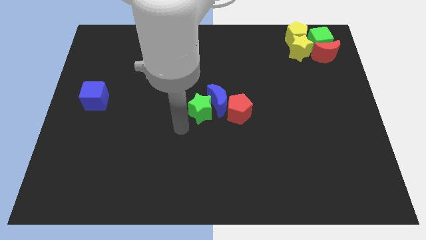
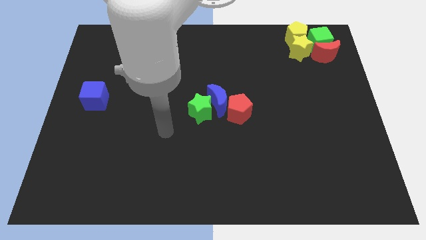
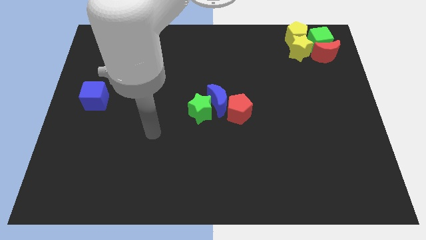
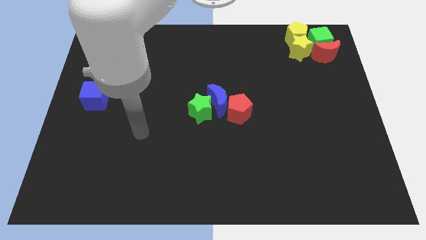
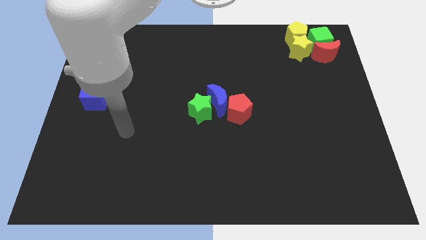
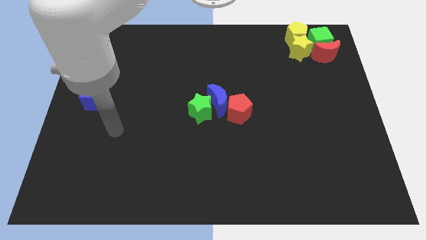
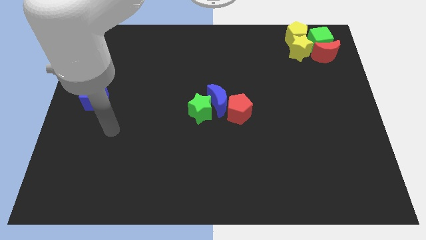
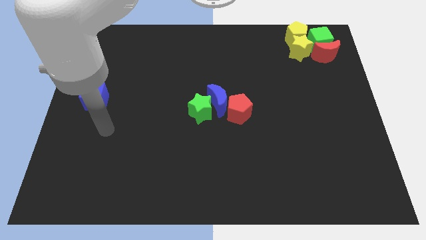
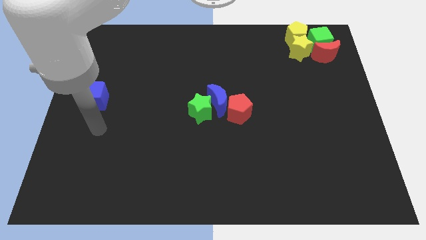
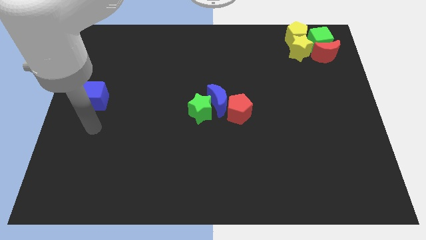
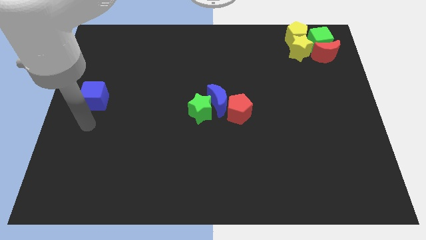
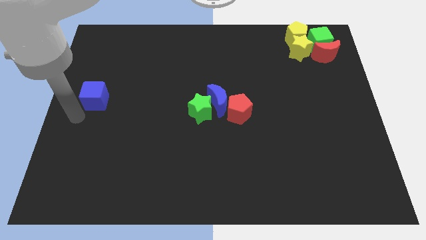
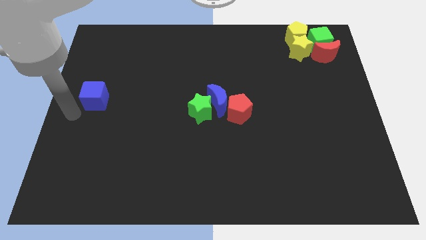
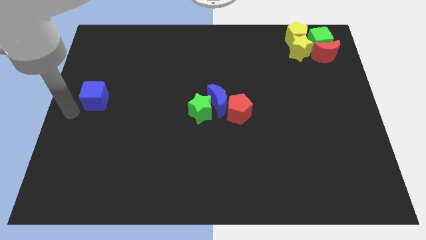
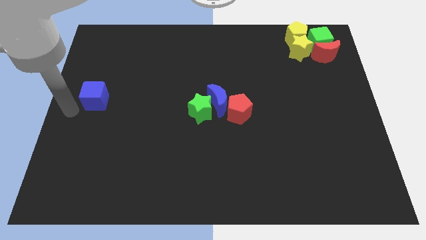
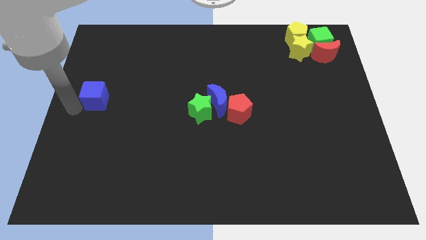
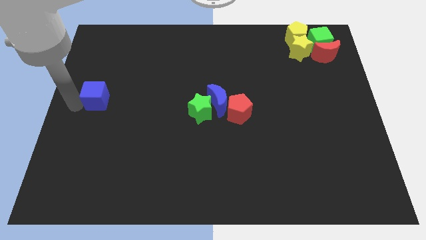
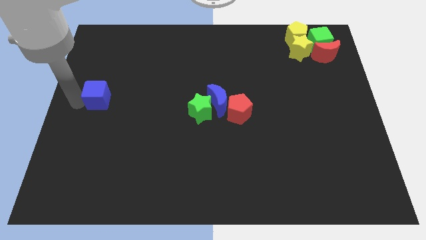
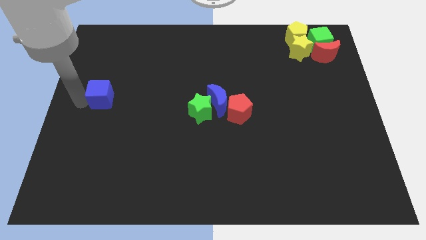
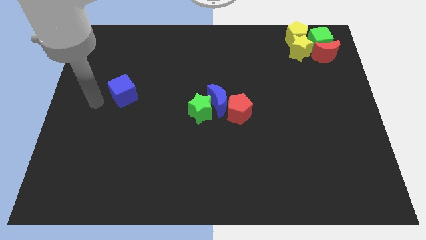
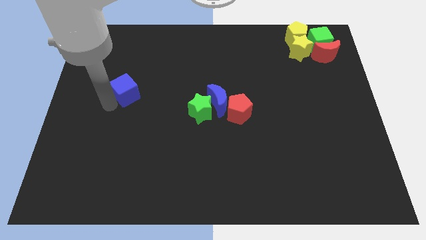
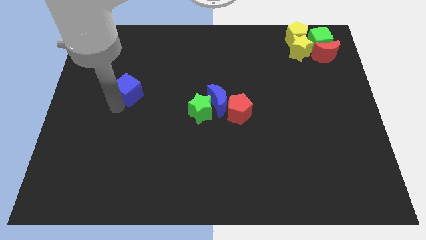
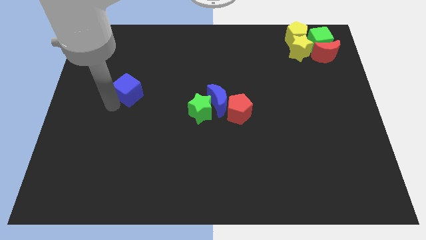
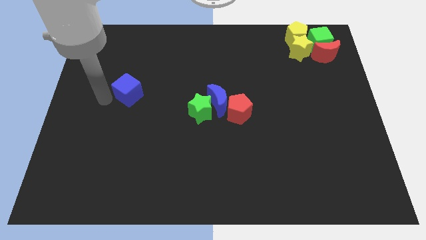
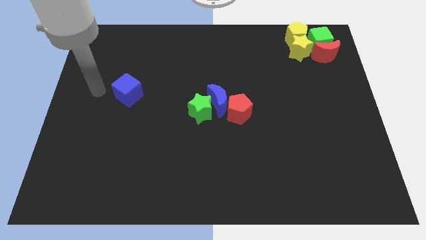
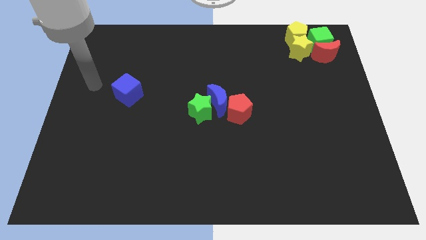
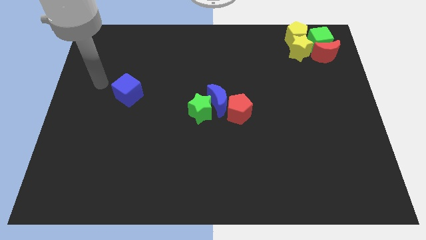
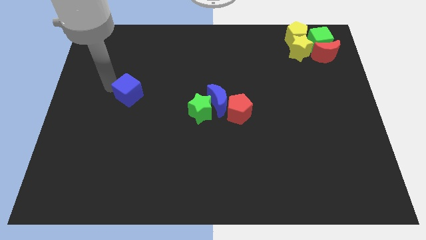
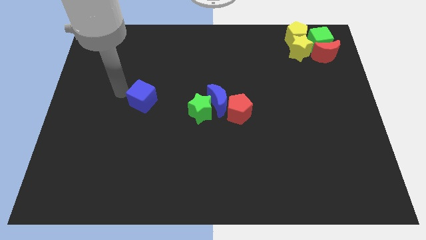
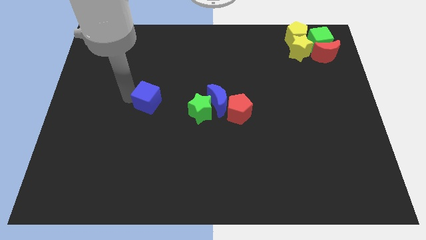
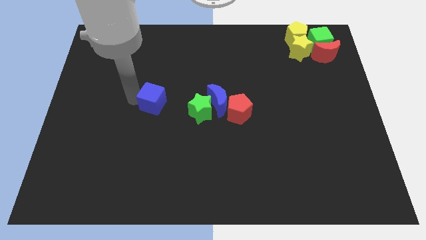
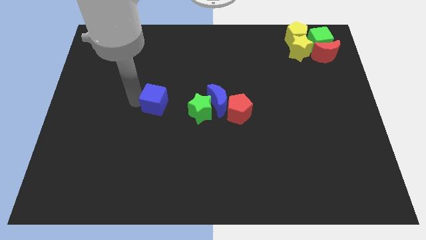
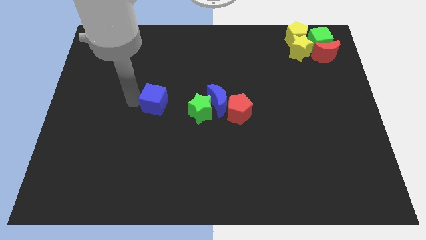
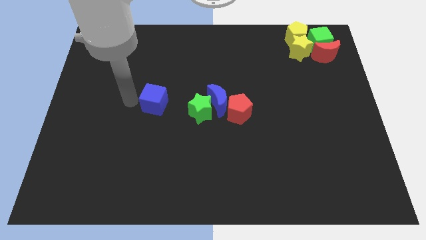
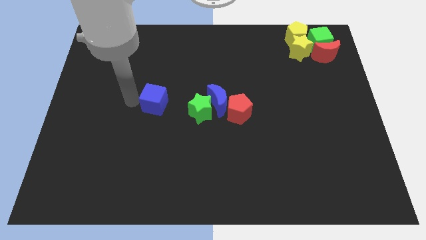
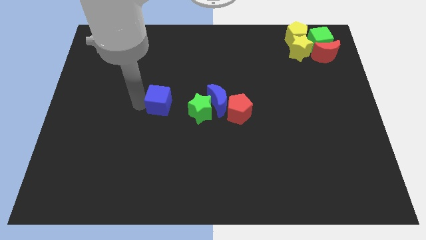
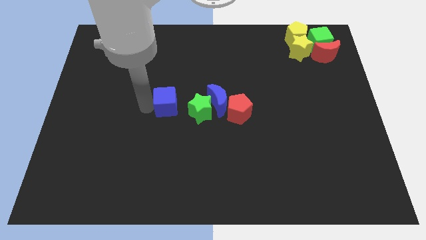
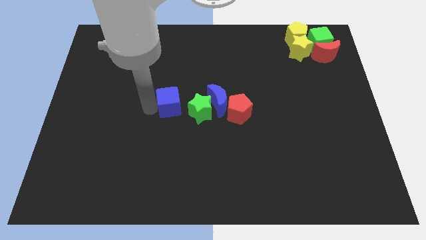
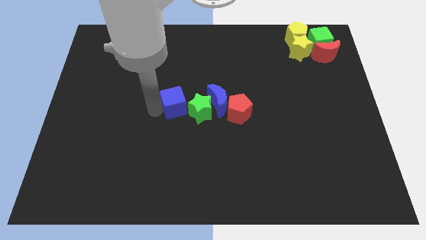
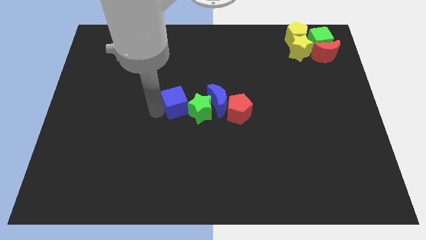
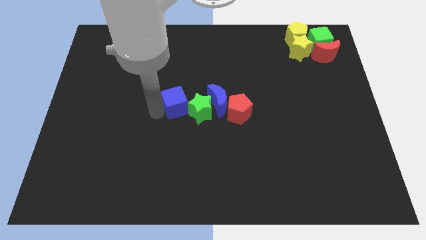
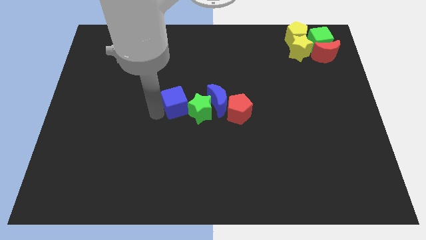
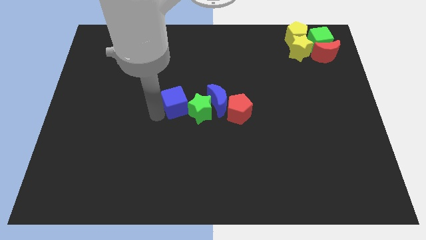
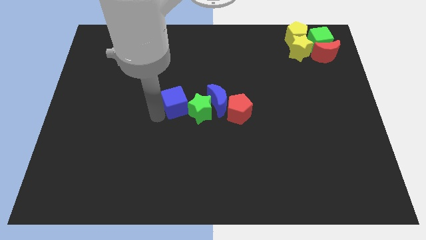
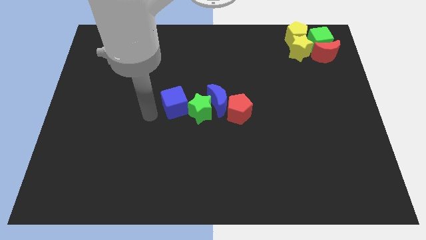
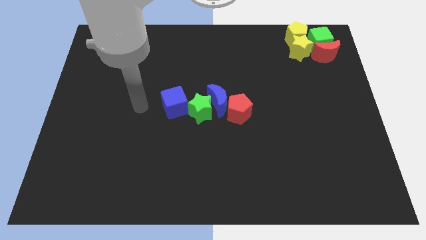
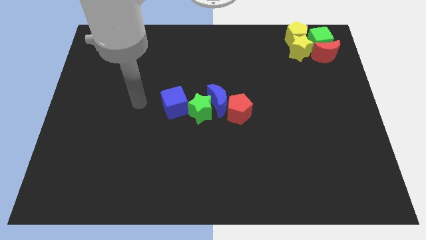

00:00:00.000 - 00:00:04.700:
move the blue cube to the left of the green star

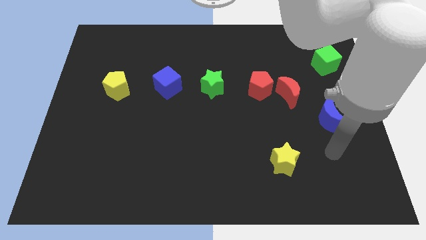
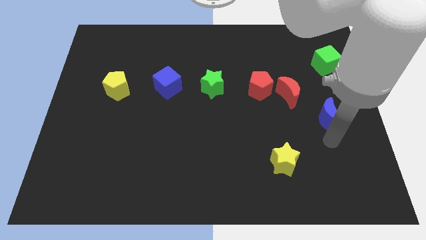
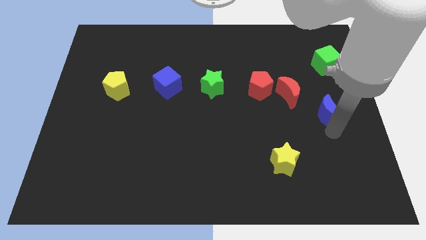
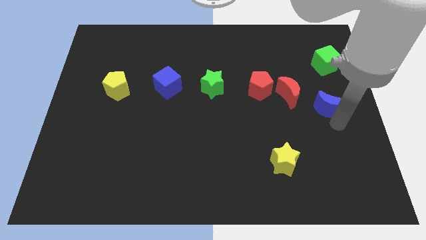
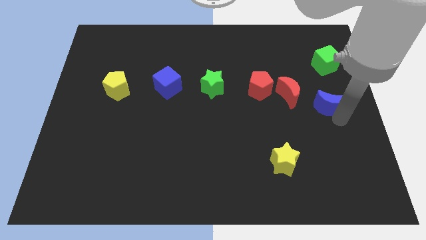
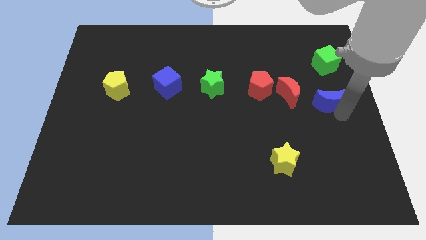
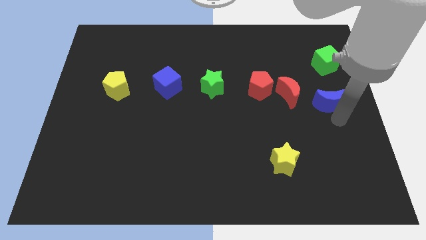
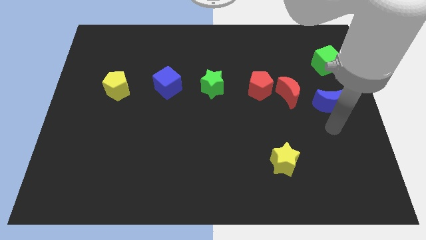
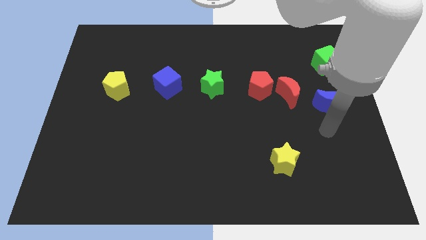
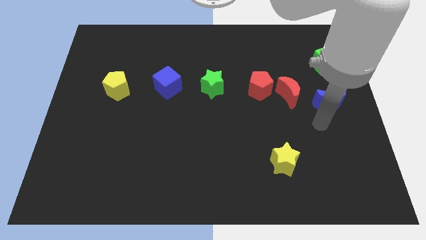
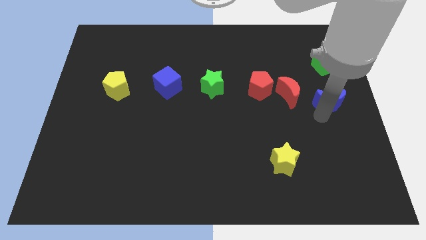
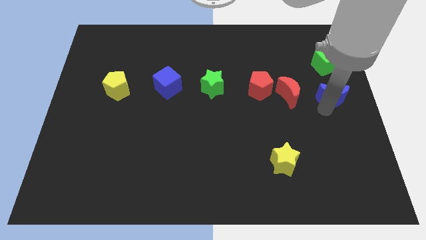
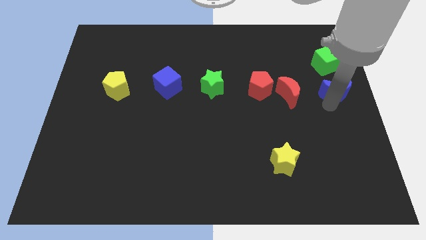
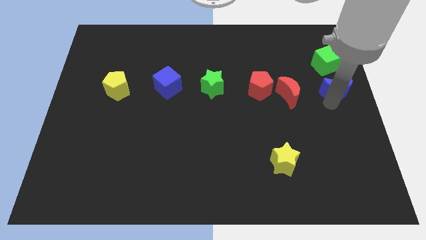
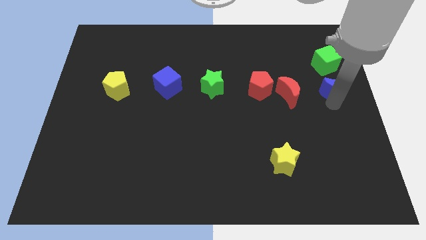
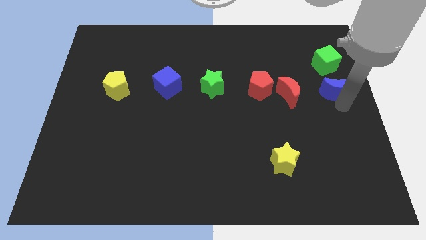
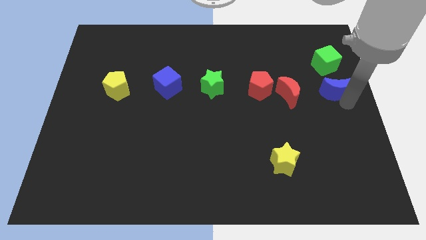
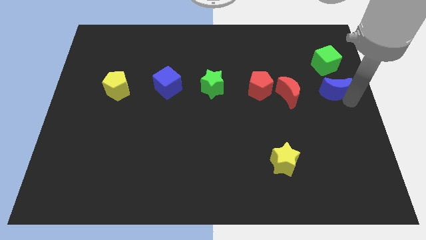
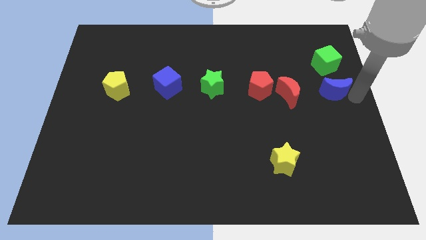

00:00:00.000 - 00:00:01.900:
move the blue moon below the green cube

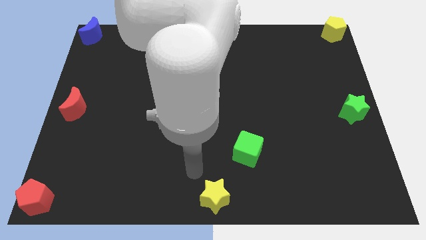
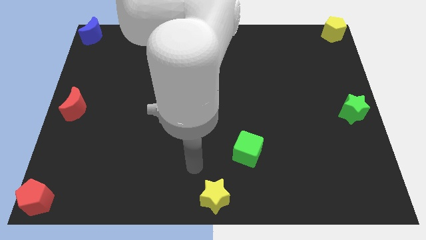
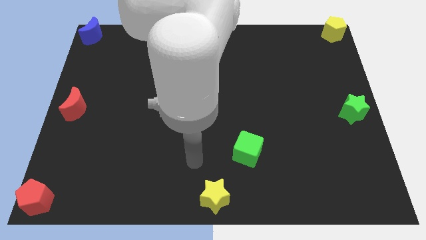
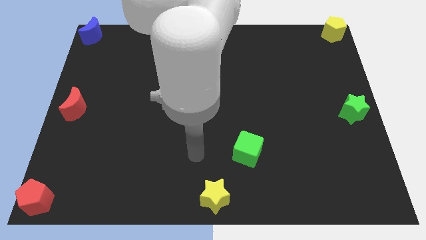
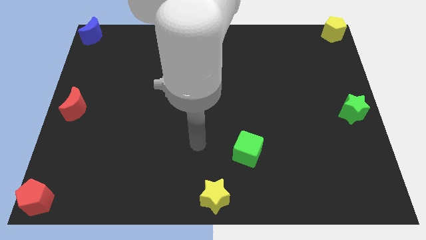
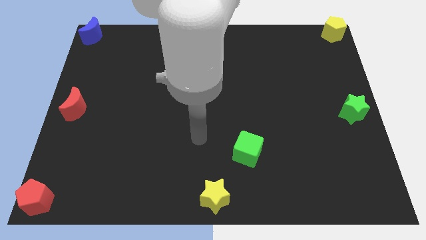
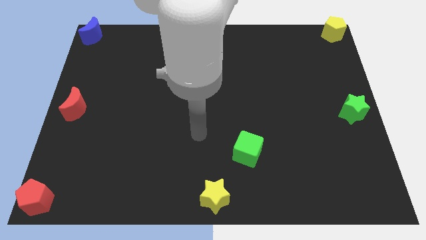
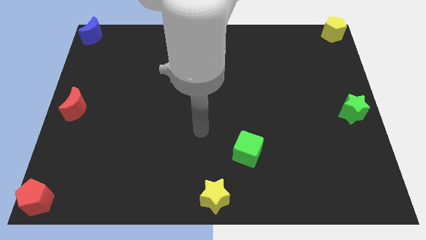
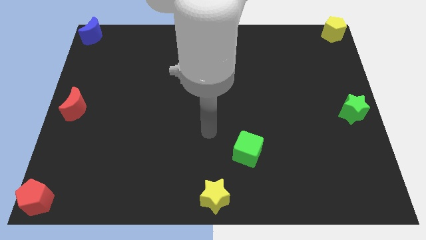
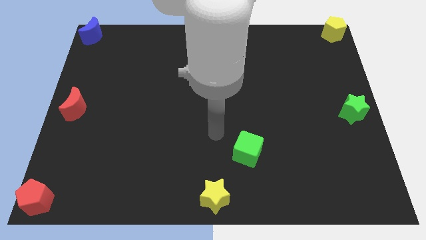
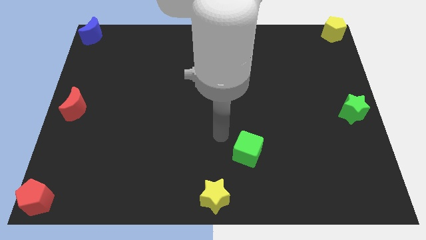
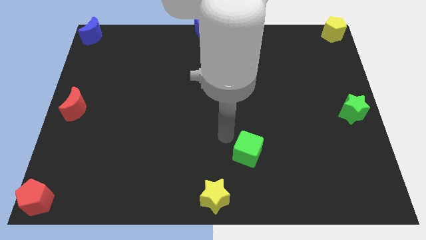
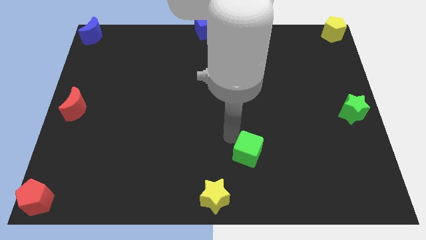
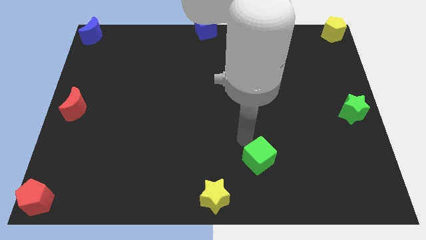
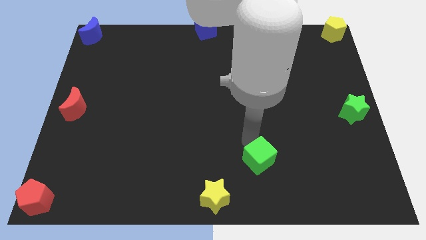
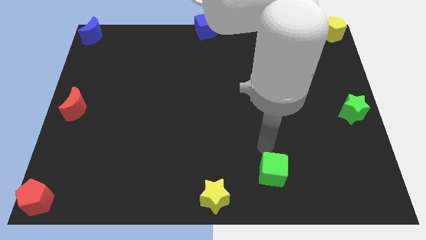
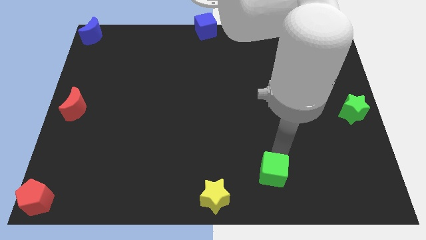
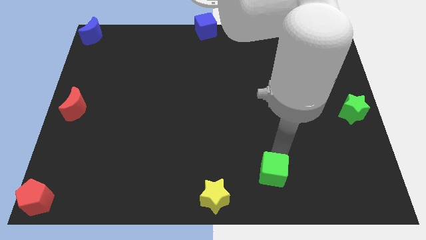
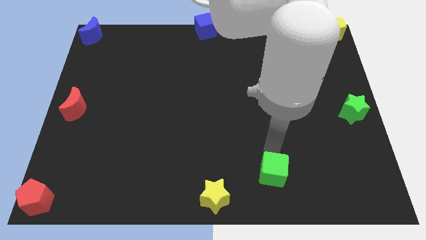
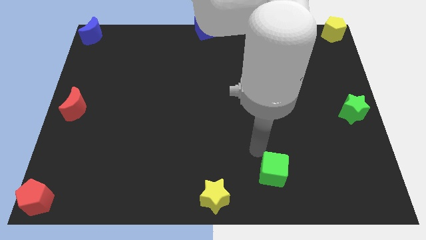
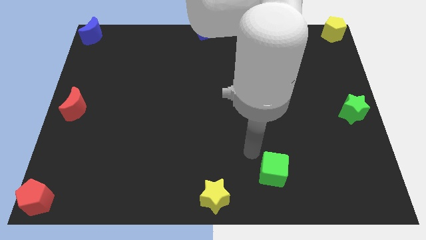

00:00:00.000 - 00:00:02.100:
slightly touch the green cube

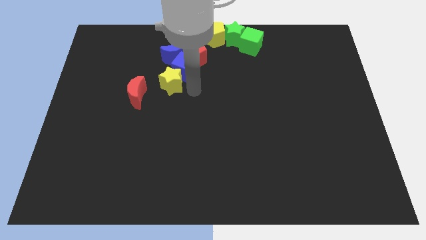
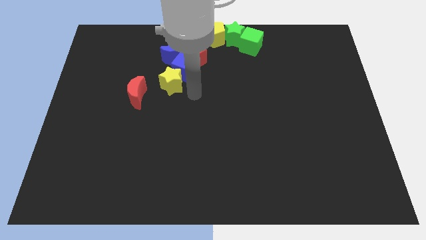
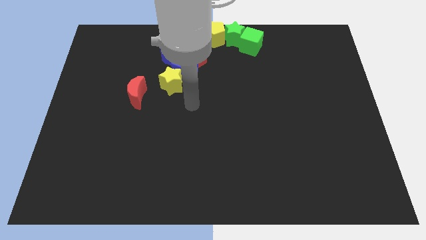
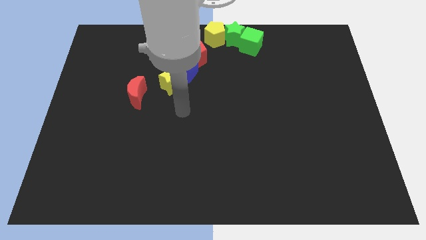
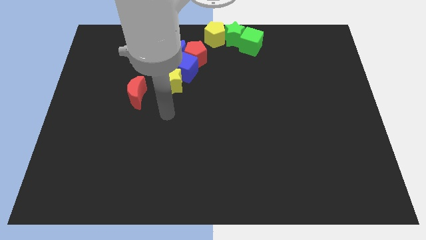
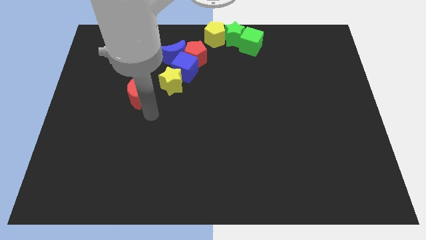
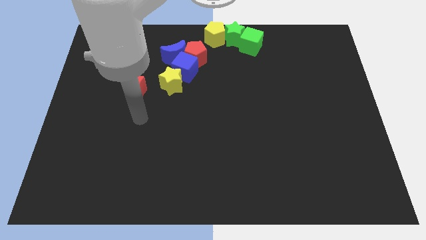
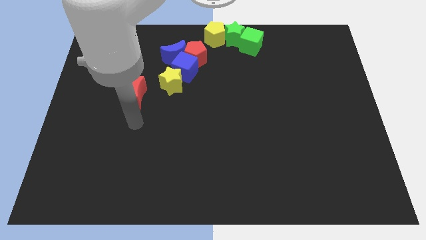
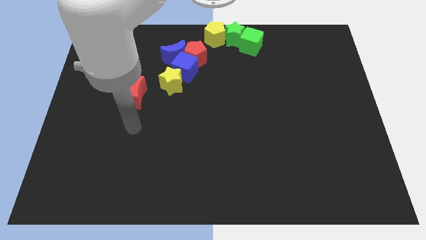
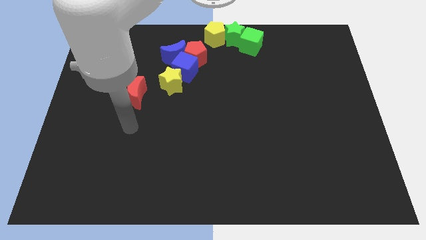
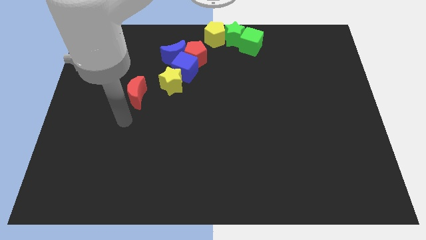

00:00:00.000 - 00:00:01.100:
move your arm below the red crescent
